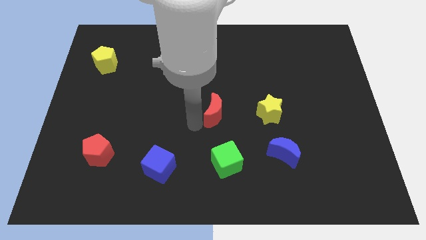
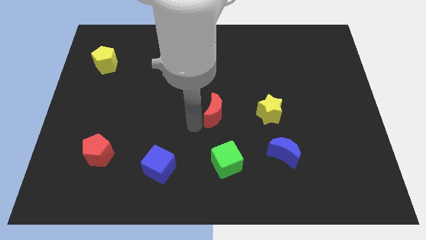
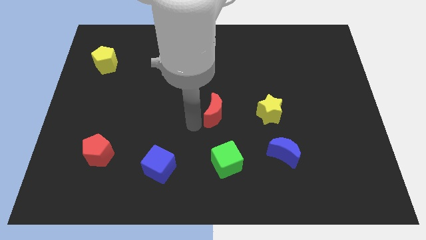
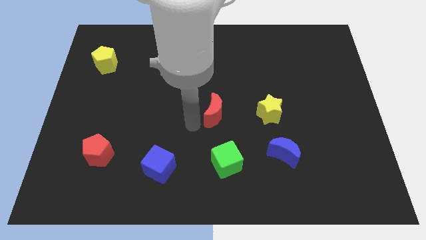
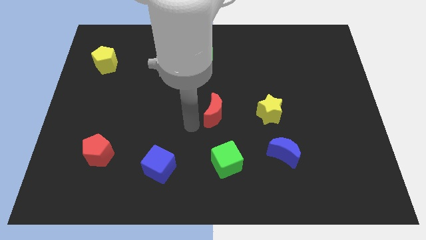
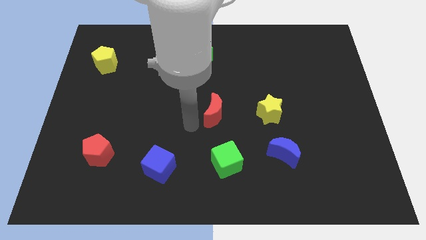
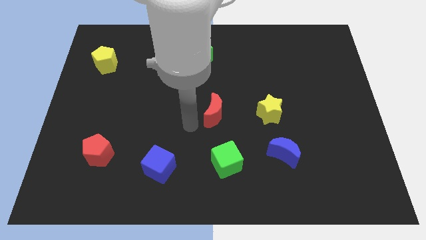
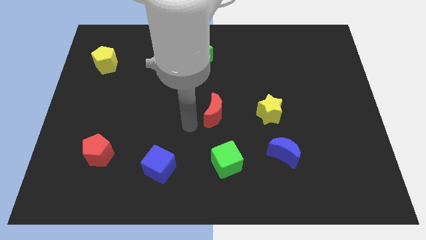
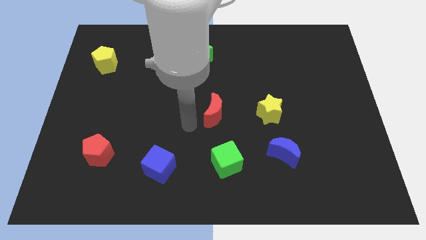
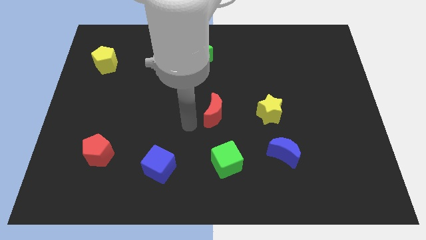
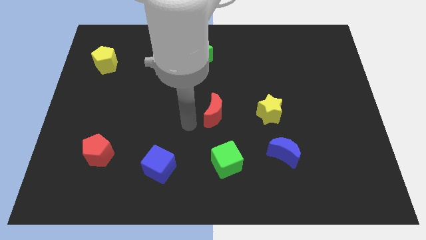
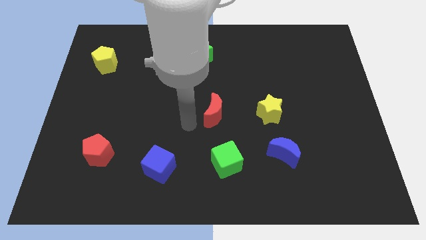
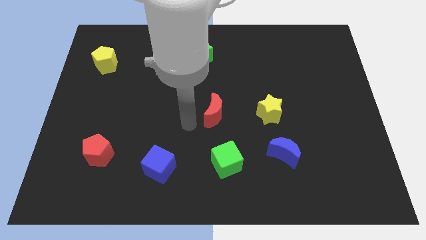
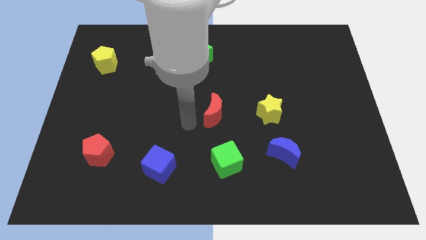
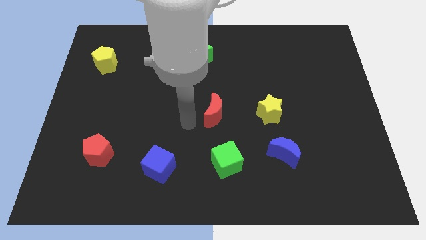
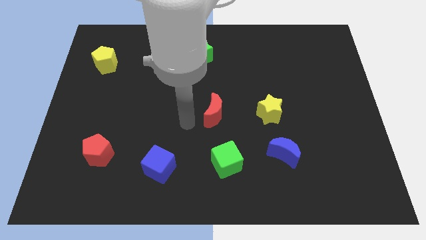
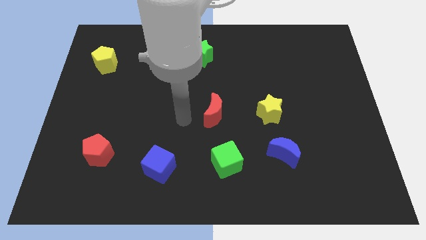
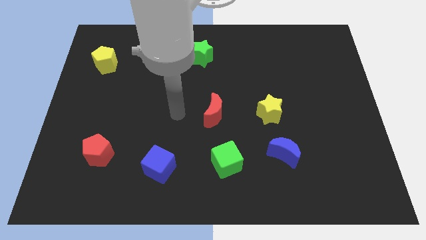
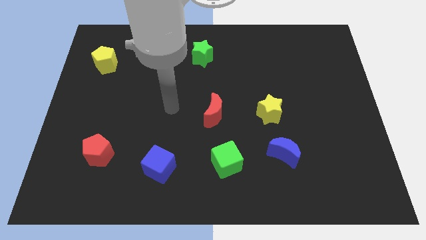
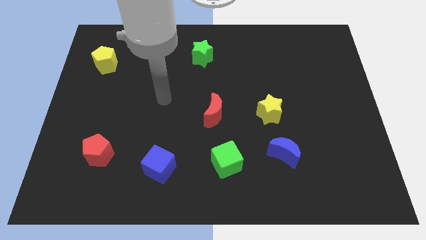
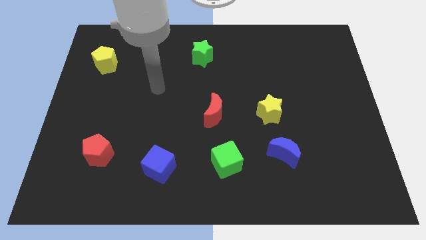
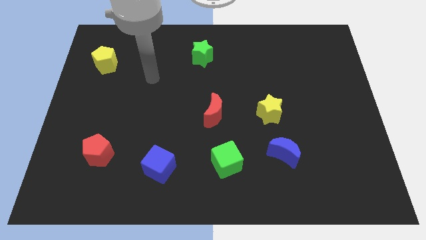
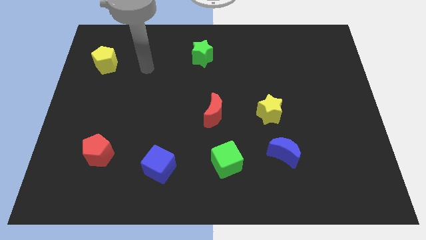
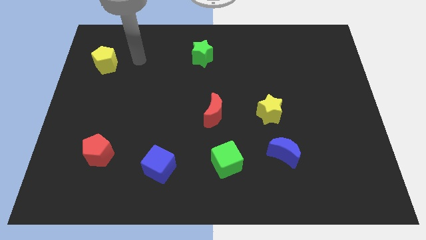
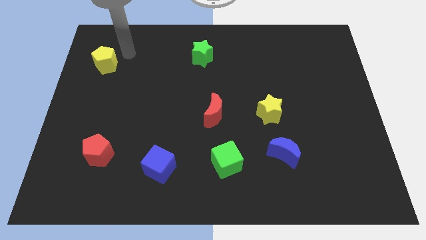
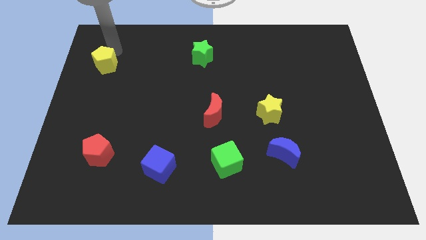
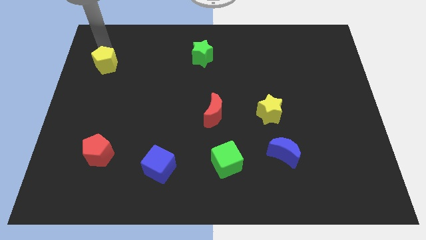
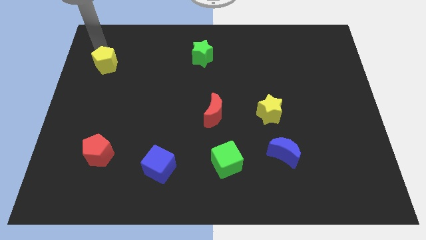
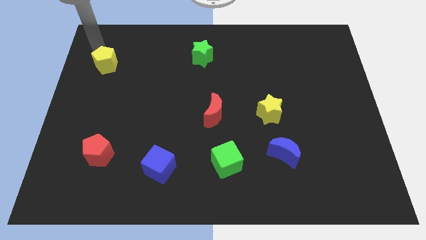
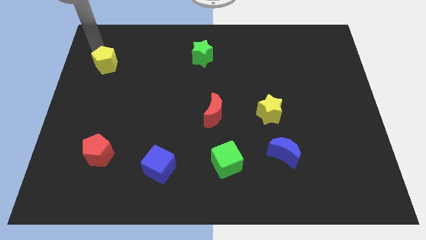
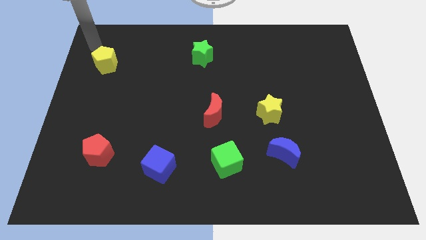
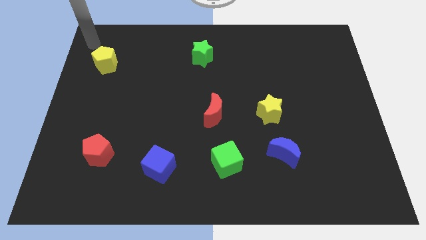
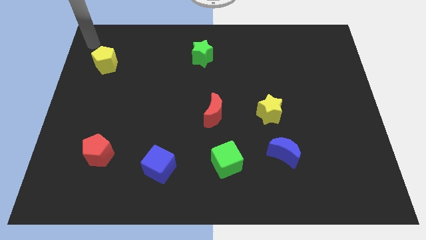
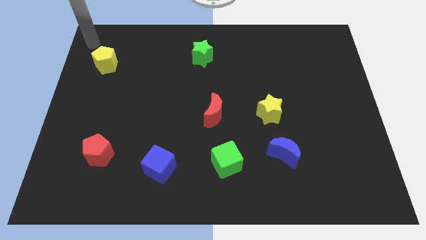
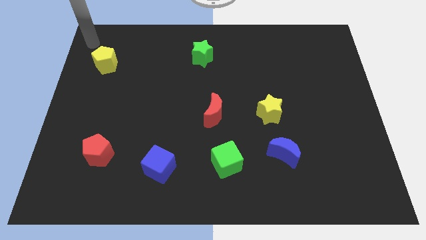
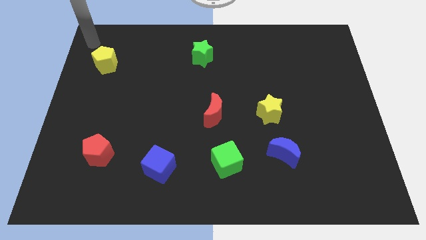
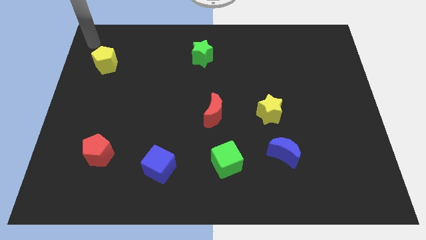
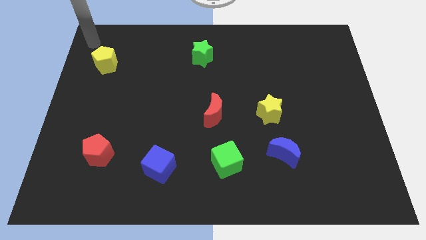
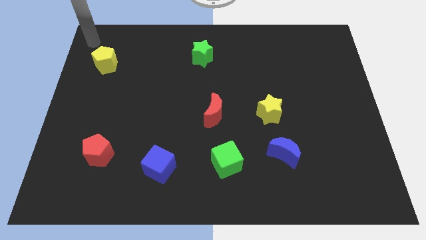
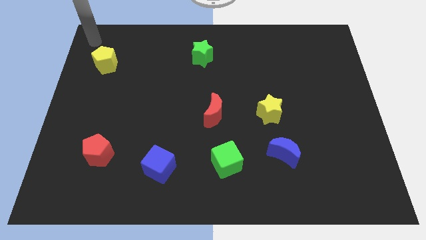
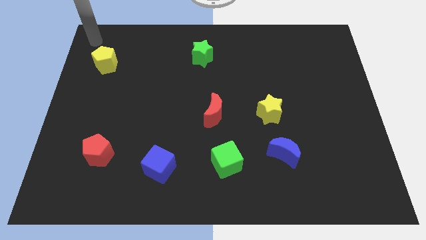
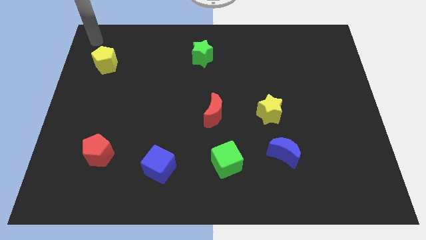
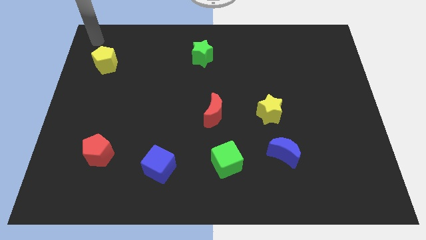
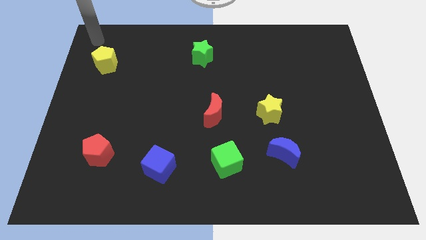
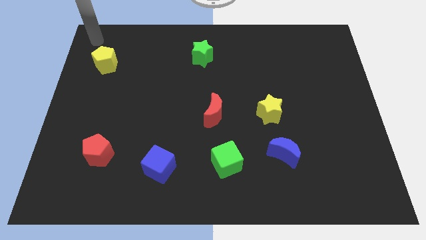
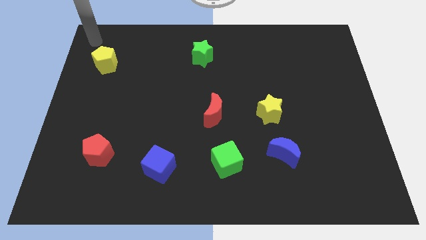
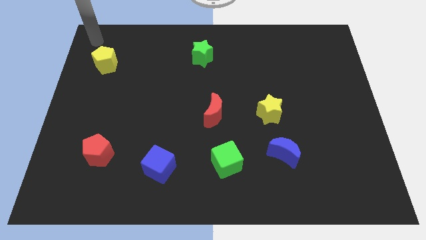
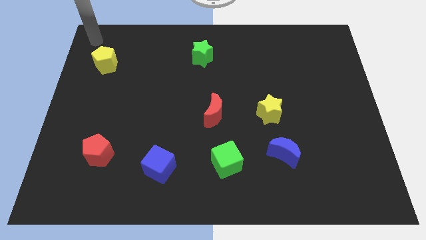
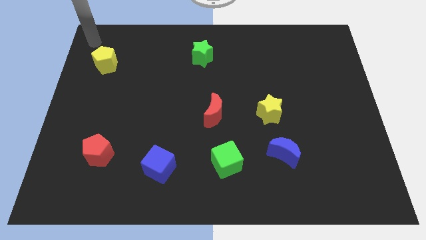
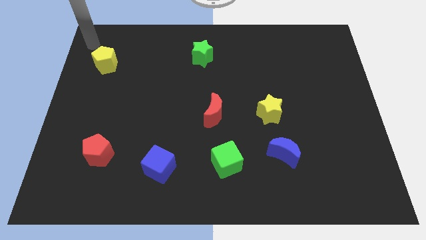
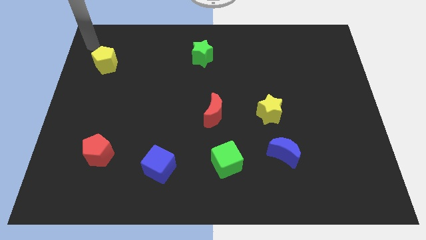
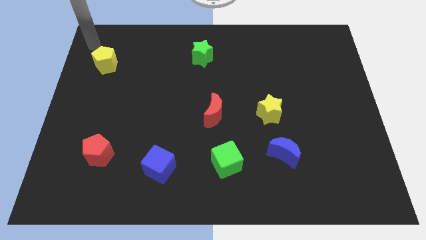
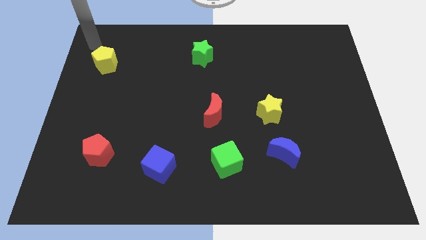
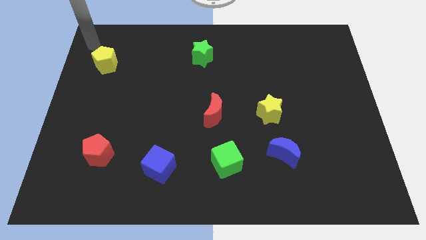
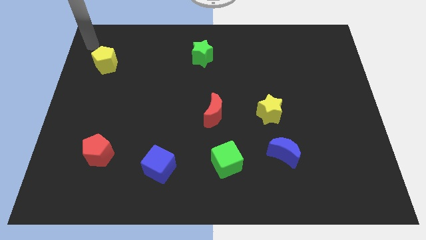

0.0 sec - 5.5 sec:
point your hand at the top left side of the yellow pentagon

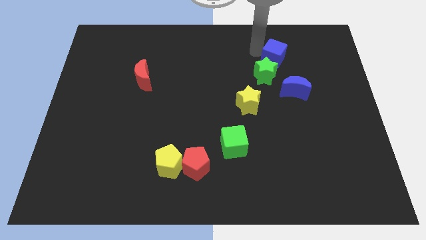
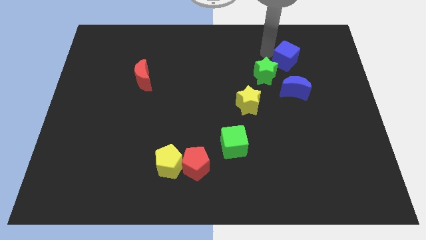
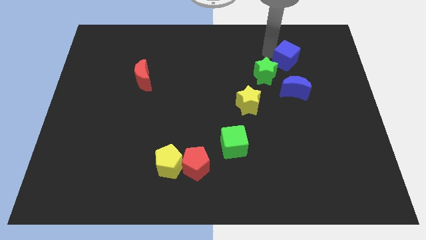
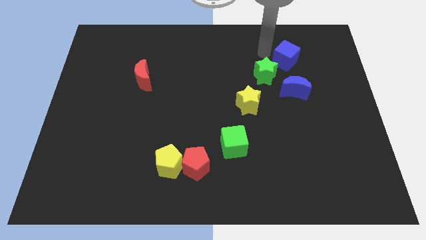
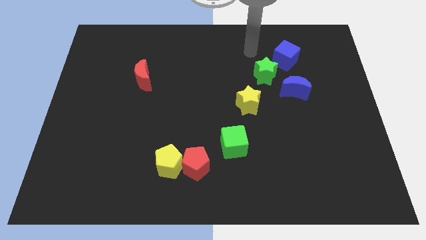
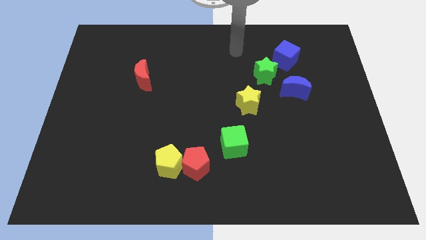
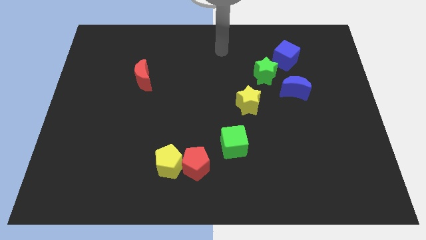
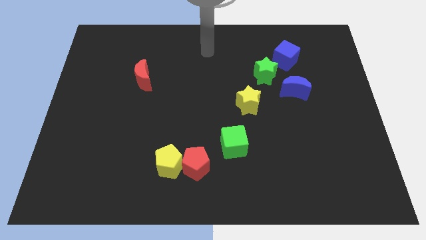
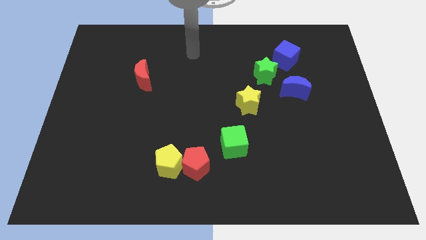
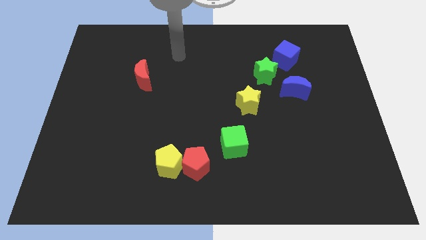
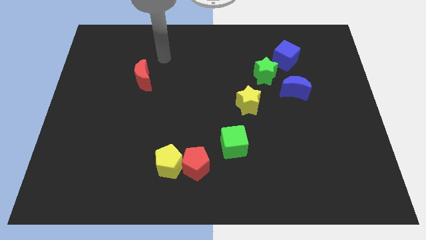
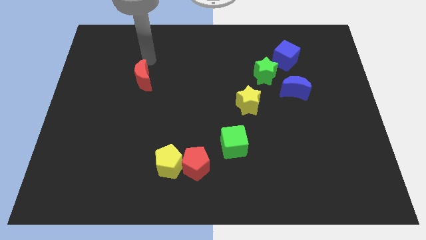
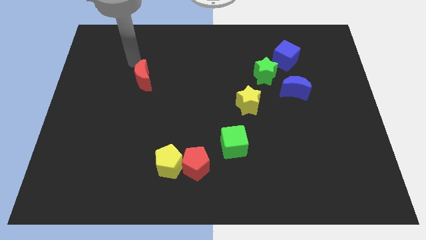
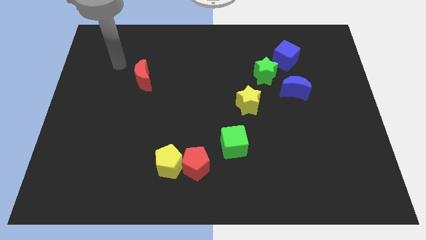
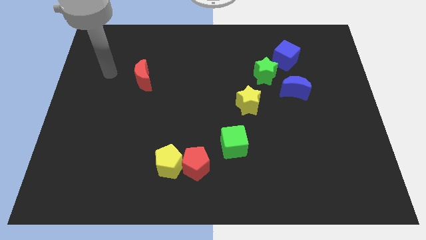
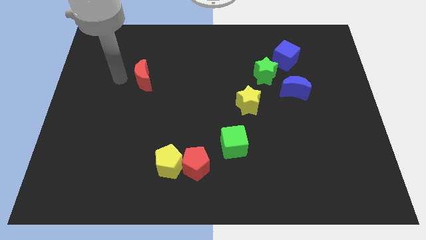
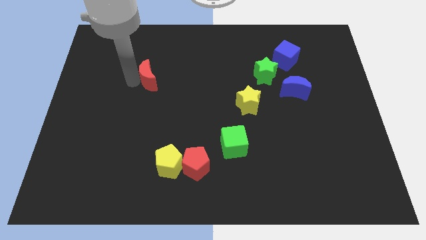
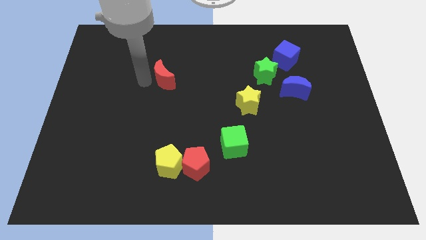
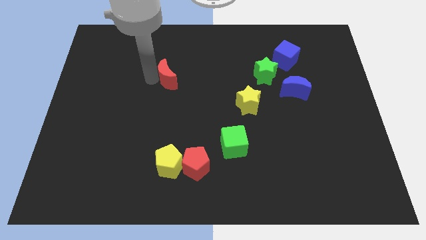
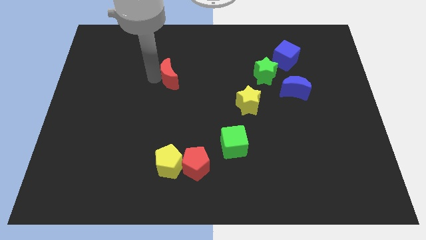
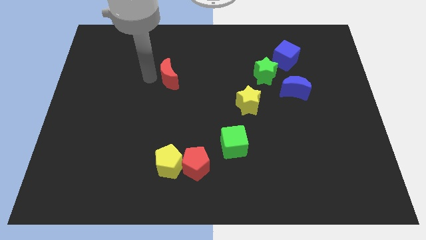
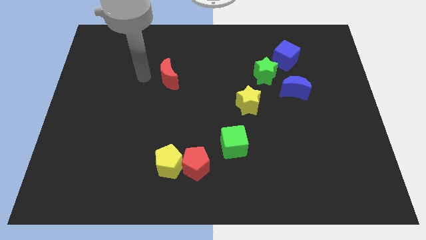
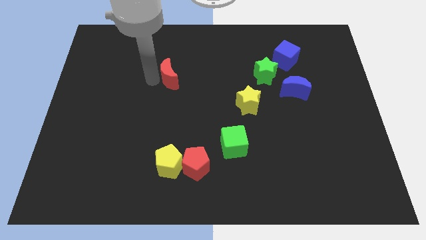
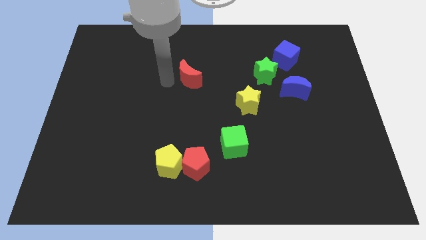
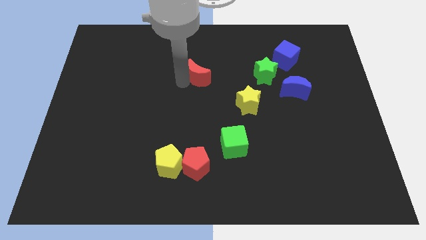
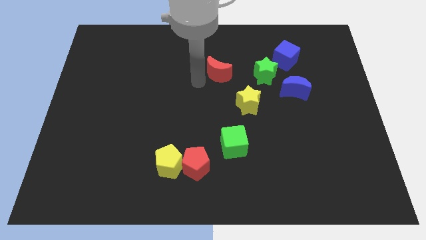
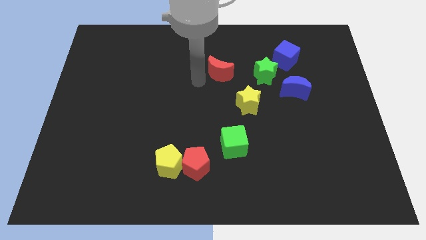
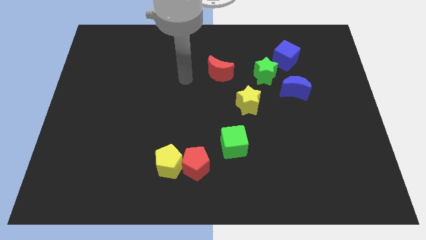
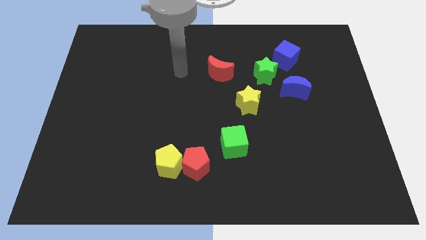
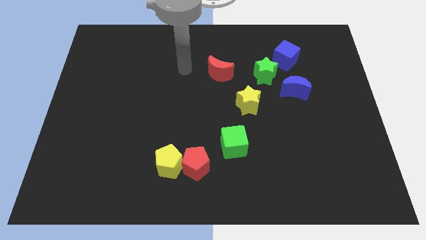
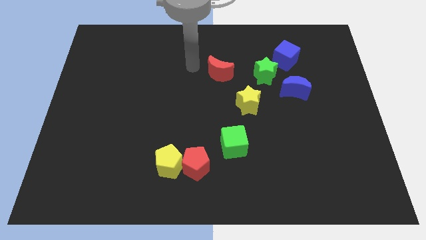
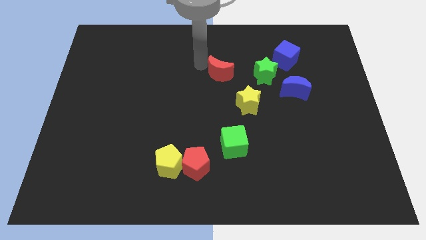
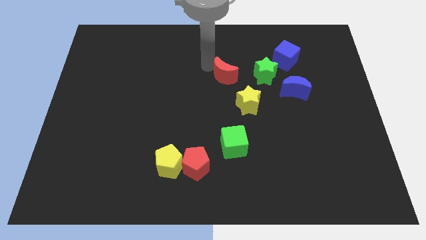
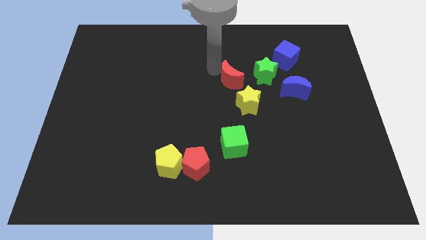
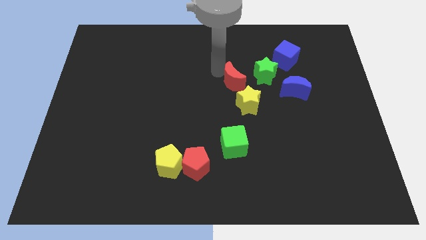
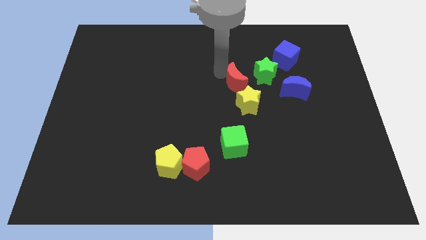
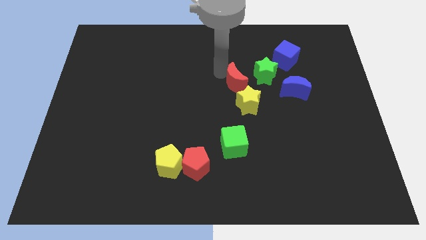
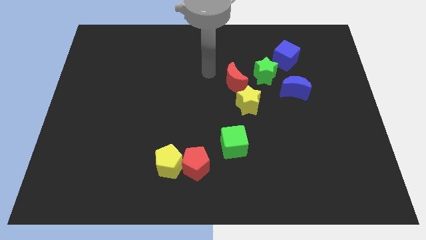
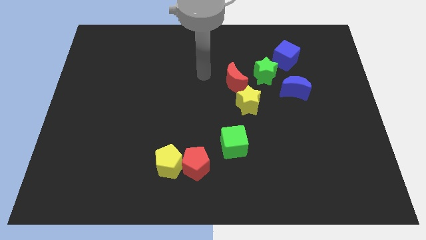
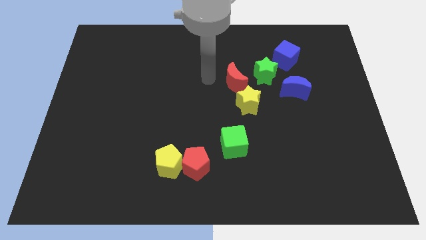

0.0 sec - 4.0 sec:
place red crescent diagonally to the left top of the yellow star
